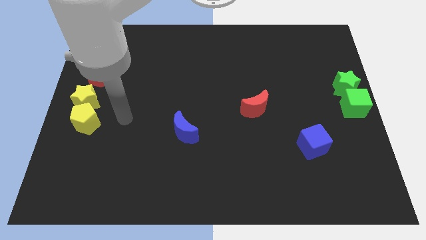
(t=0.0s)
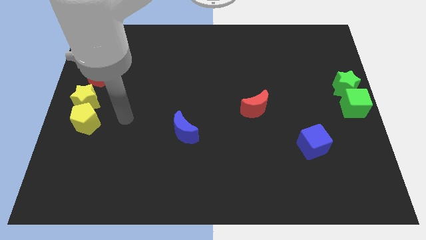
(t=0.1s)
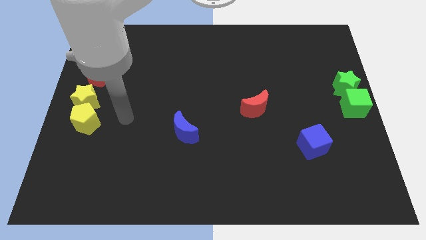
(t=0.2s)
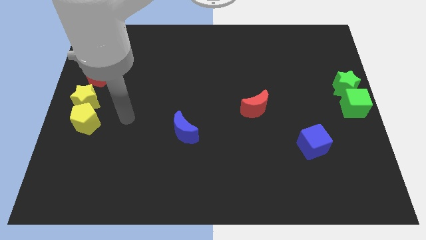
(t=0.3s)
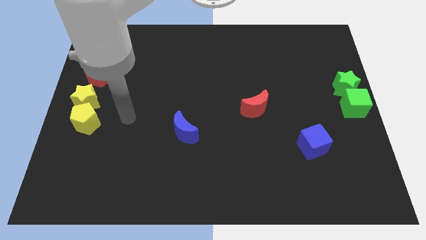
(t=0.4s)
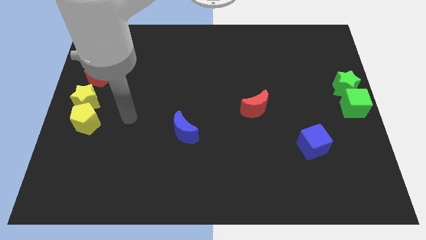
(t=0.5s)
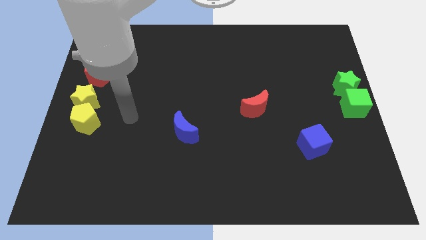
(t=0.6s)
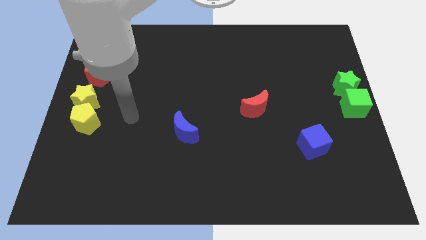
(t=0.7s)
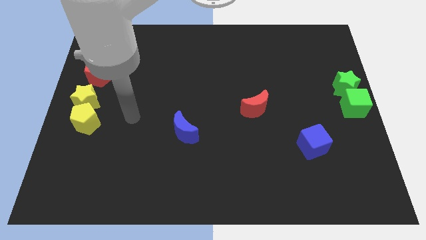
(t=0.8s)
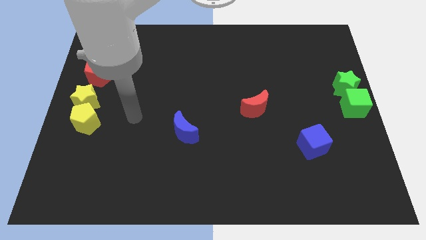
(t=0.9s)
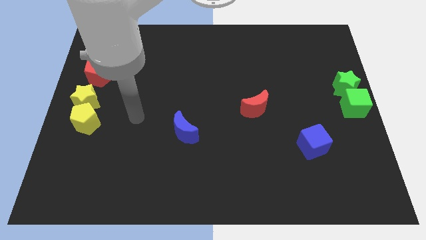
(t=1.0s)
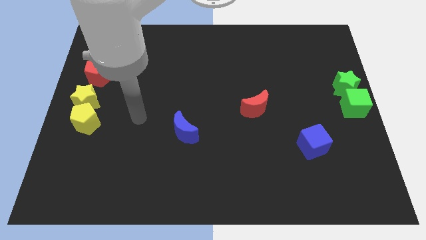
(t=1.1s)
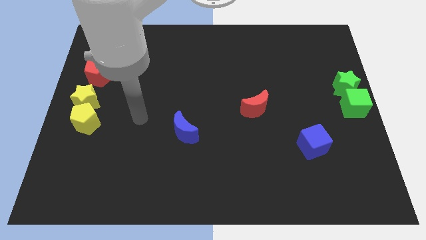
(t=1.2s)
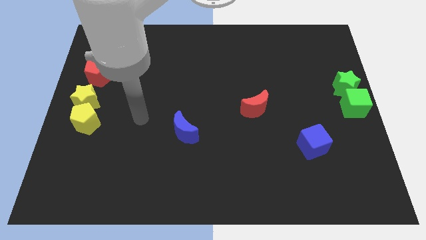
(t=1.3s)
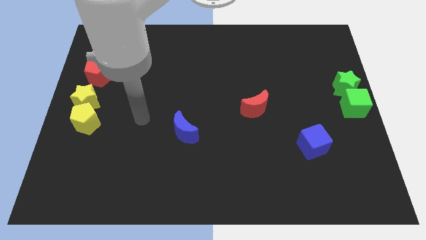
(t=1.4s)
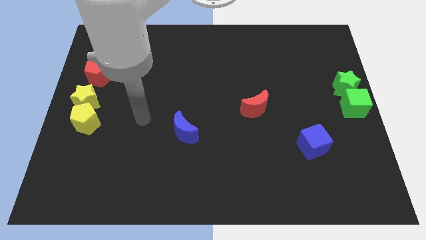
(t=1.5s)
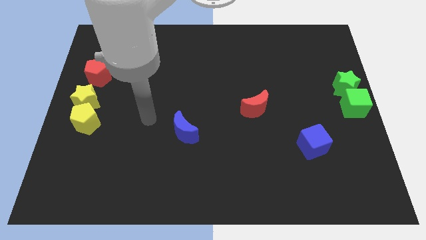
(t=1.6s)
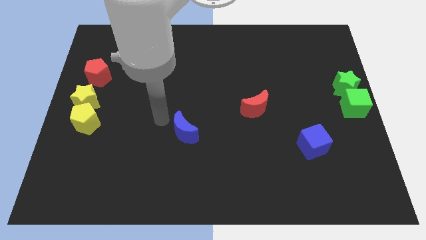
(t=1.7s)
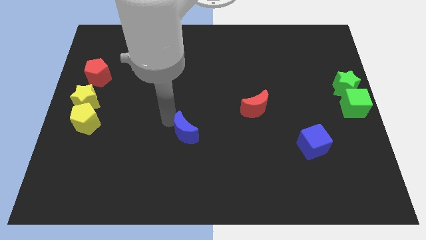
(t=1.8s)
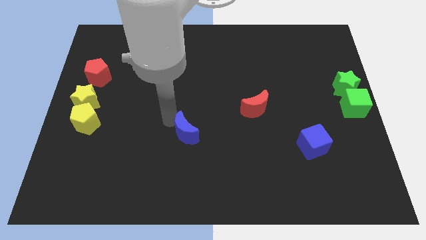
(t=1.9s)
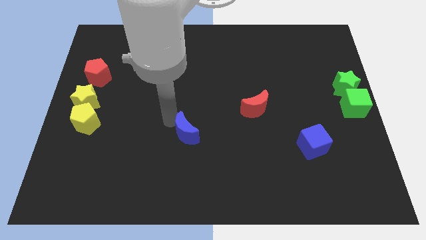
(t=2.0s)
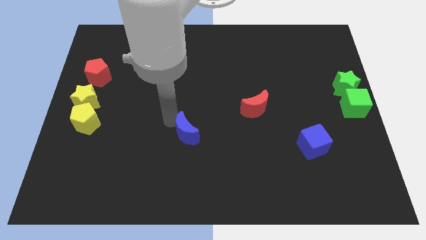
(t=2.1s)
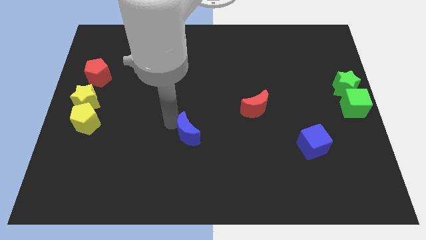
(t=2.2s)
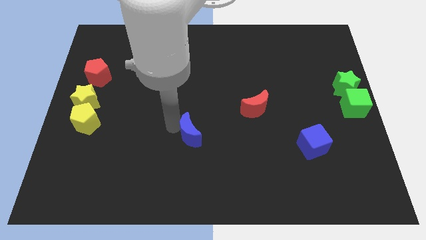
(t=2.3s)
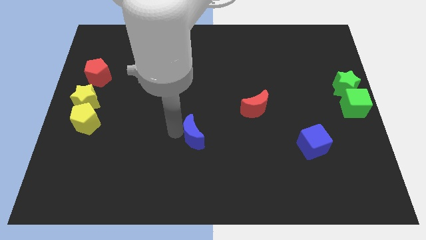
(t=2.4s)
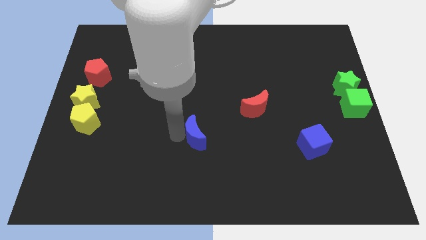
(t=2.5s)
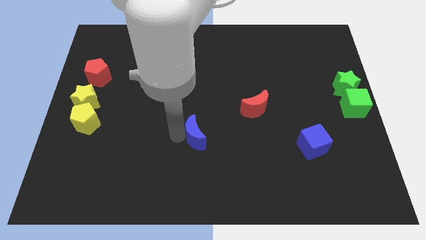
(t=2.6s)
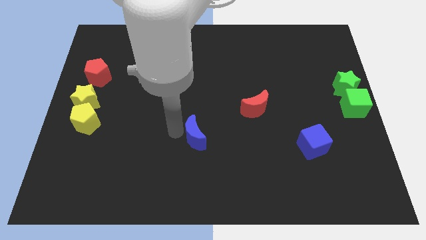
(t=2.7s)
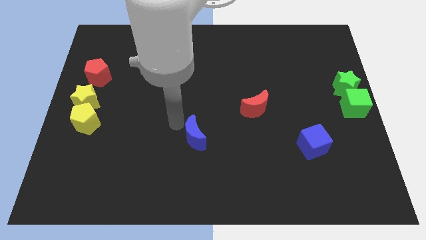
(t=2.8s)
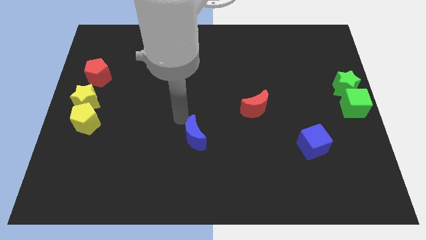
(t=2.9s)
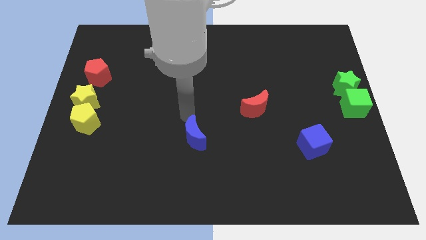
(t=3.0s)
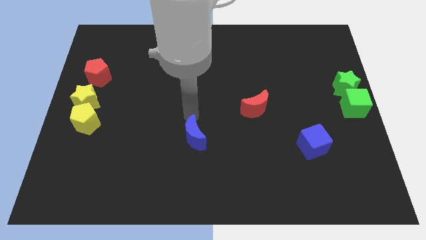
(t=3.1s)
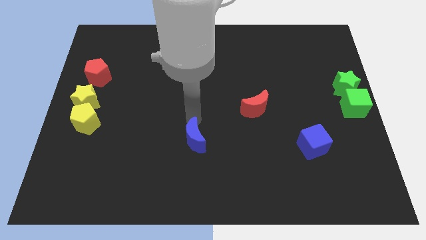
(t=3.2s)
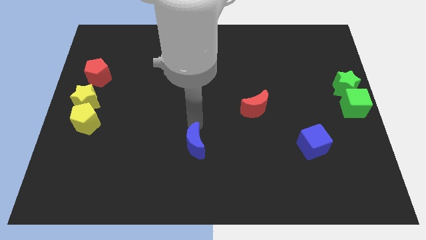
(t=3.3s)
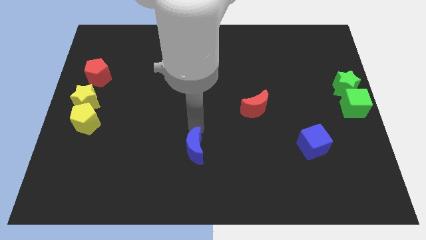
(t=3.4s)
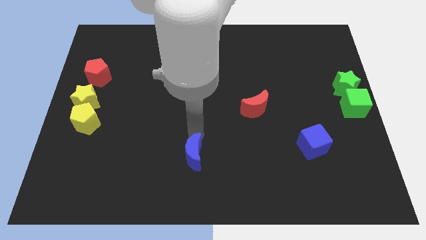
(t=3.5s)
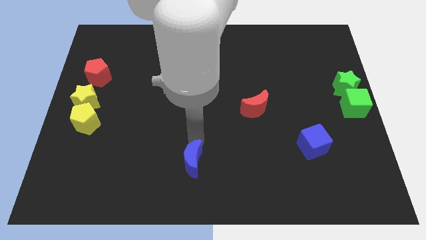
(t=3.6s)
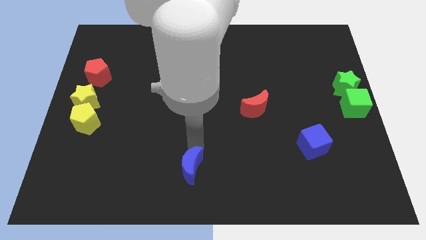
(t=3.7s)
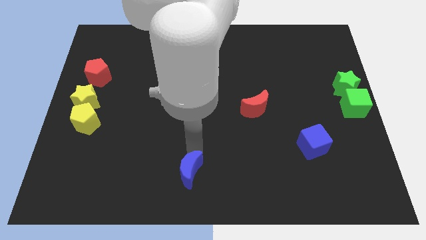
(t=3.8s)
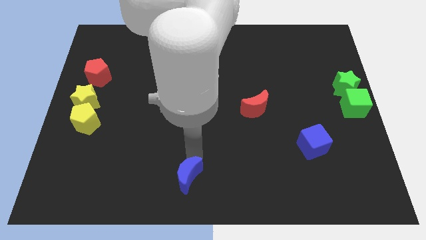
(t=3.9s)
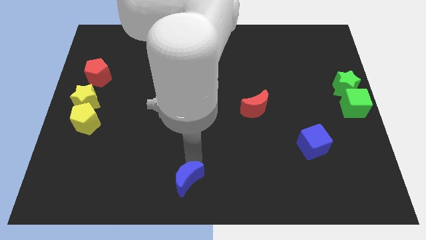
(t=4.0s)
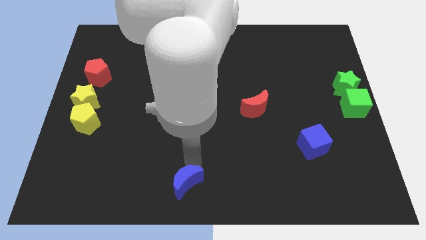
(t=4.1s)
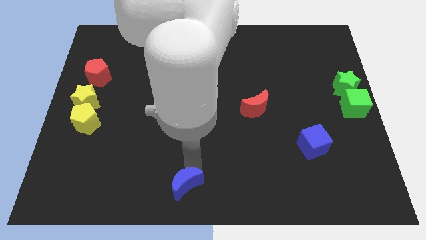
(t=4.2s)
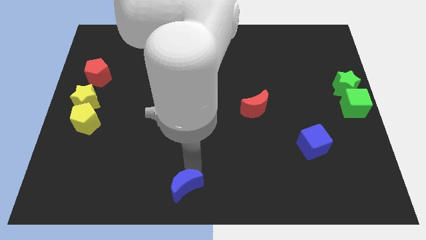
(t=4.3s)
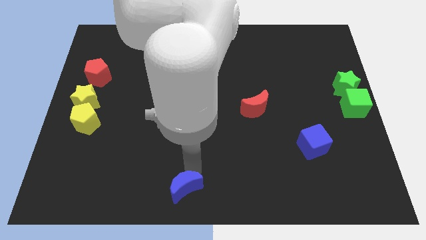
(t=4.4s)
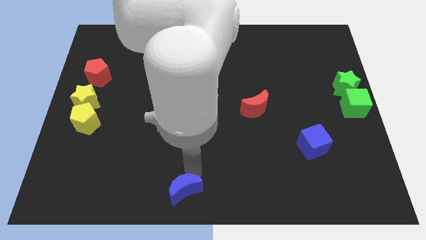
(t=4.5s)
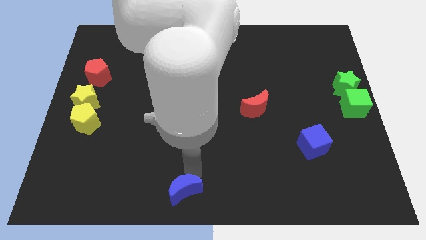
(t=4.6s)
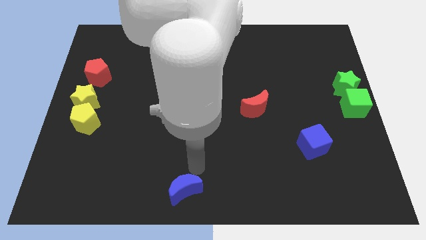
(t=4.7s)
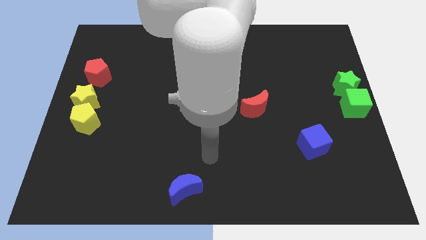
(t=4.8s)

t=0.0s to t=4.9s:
place the blue cube to the bottom of the board

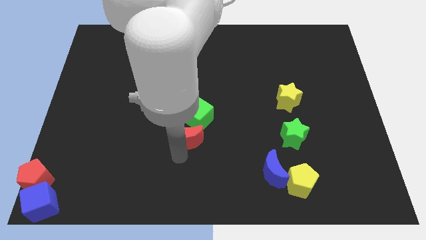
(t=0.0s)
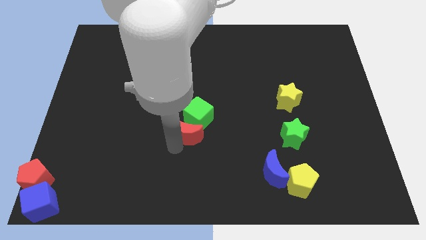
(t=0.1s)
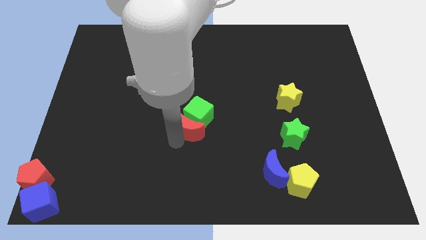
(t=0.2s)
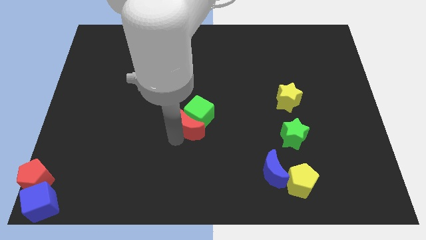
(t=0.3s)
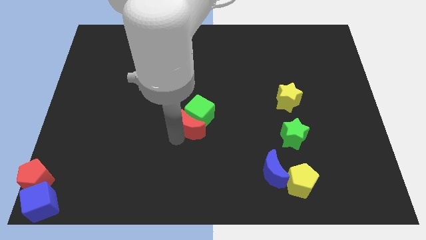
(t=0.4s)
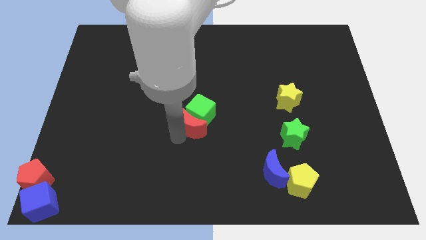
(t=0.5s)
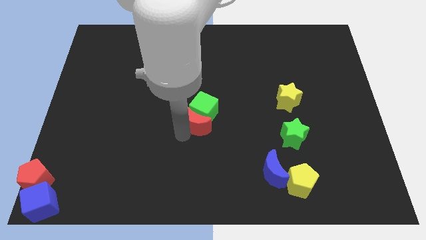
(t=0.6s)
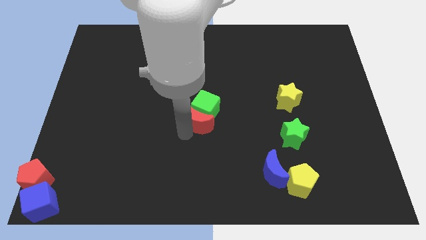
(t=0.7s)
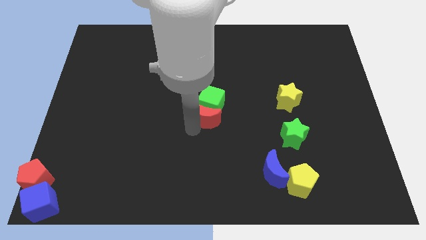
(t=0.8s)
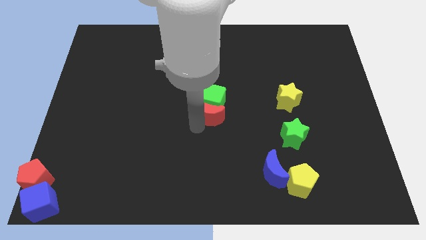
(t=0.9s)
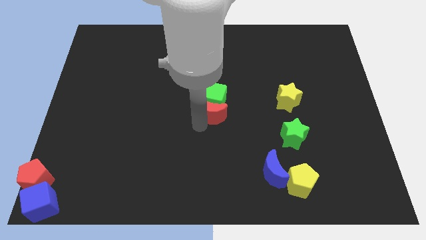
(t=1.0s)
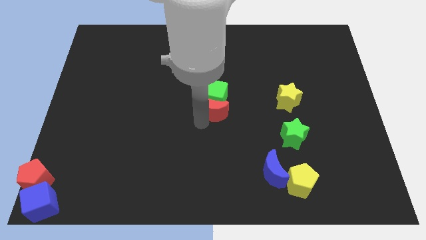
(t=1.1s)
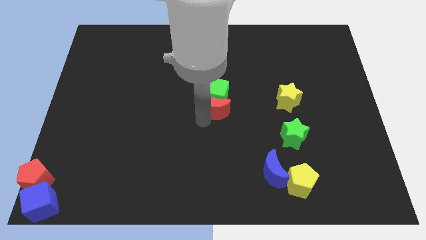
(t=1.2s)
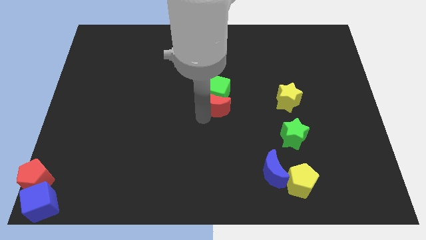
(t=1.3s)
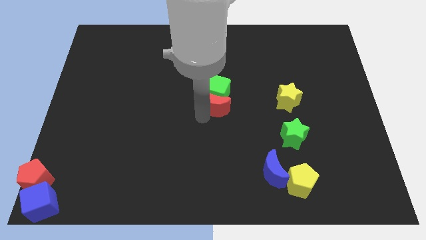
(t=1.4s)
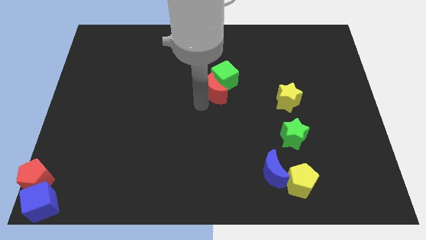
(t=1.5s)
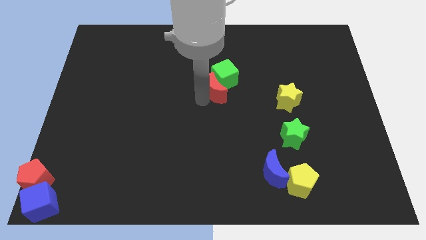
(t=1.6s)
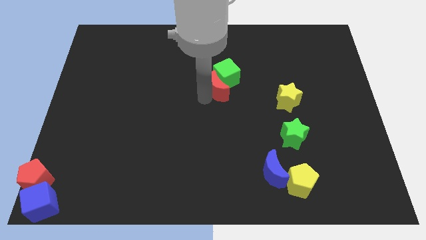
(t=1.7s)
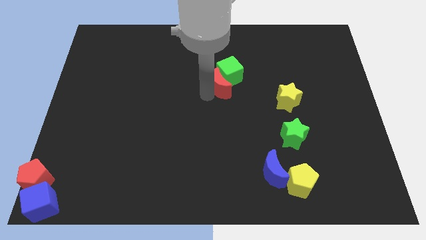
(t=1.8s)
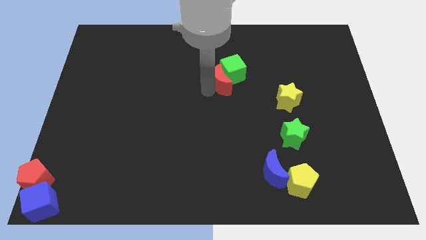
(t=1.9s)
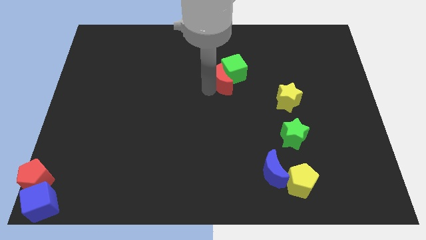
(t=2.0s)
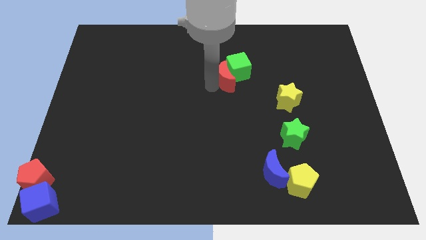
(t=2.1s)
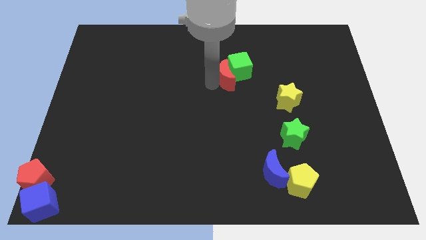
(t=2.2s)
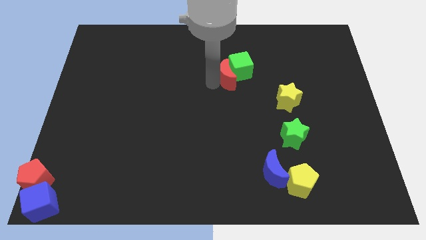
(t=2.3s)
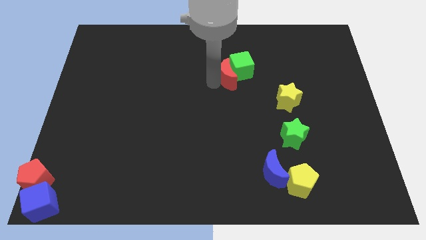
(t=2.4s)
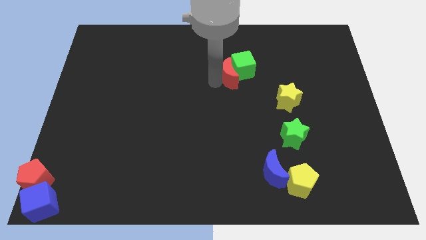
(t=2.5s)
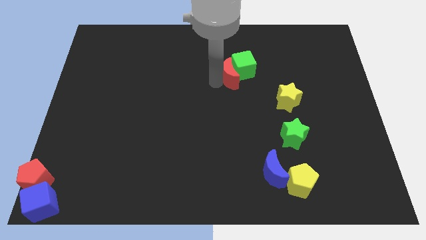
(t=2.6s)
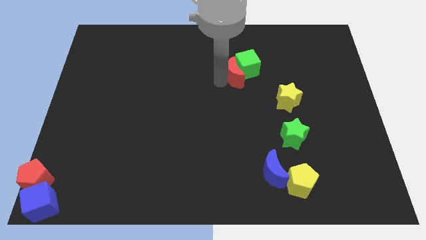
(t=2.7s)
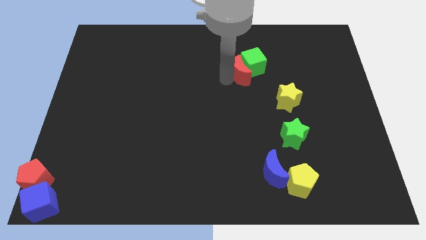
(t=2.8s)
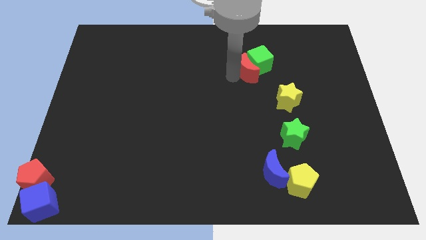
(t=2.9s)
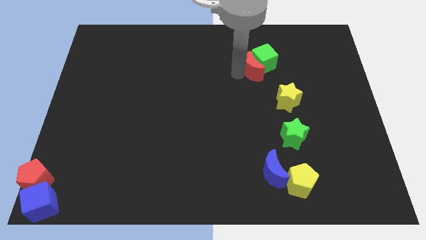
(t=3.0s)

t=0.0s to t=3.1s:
move the red crescent along with the green cube to the top left of the yellow star

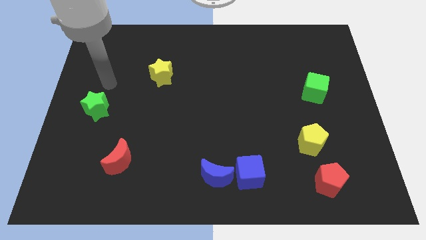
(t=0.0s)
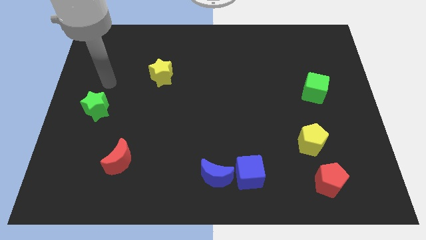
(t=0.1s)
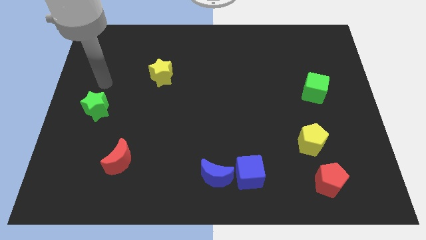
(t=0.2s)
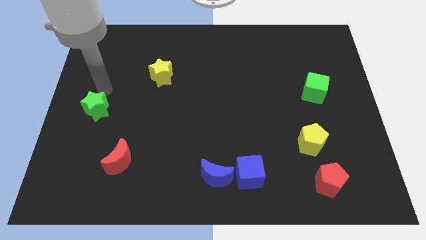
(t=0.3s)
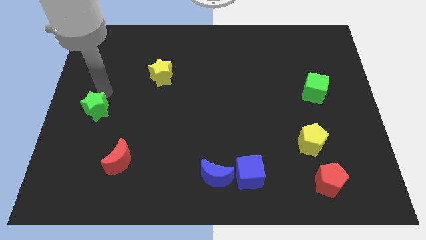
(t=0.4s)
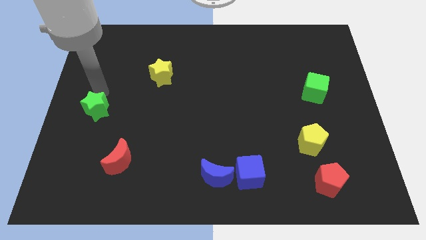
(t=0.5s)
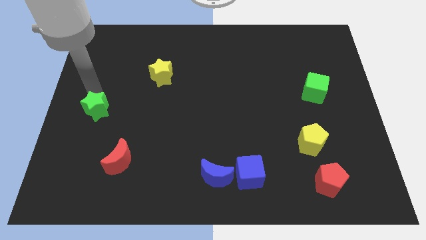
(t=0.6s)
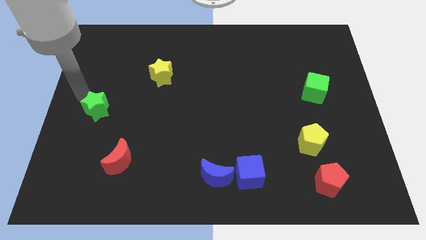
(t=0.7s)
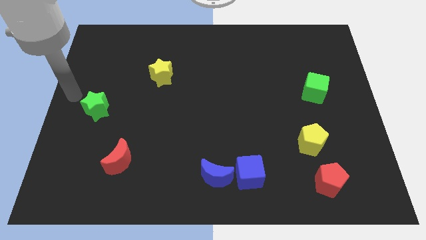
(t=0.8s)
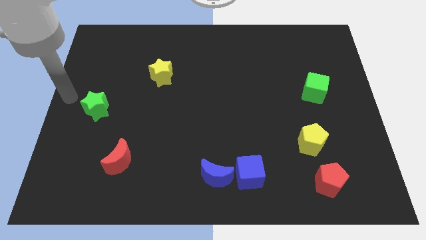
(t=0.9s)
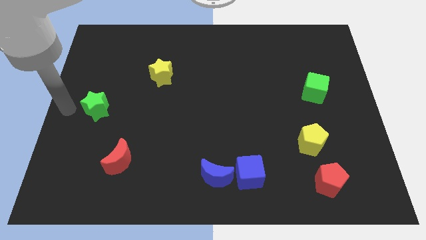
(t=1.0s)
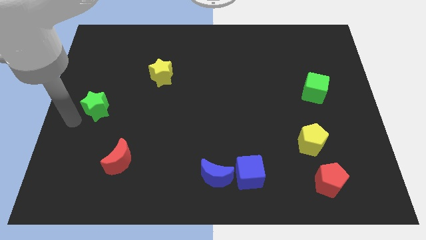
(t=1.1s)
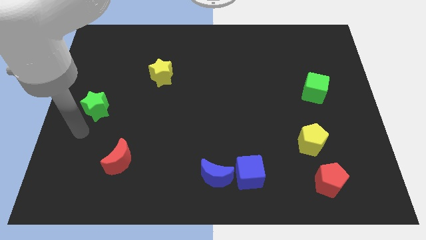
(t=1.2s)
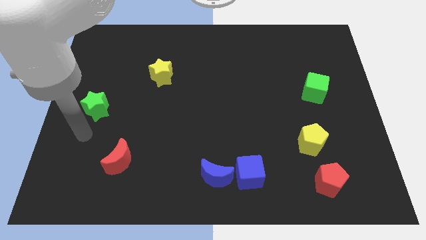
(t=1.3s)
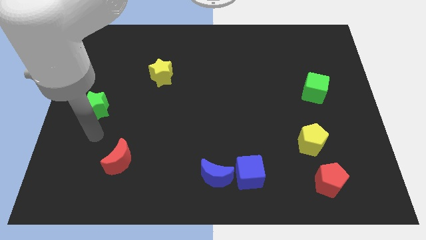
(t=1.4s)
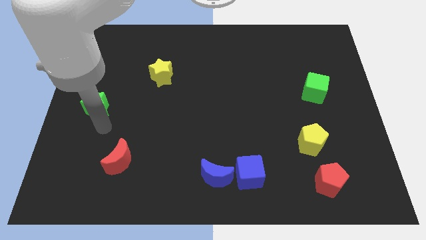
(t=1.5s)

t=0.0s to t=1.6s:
move the arm below the green star
